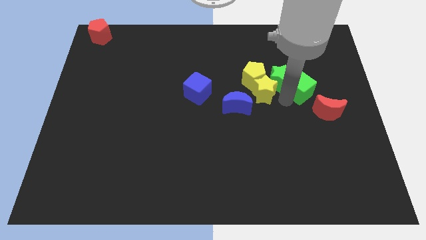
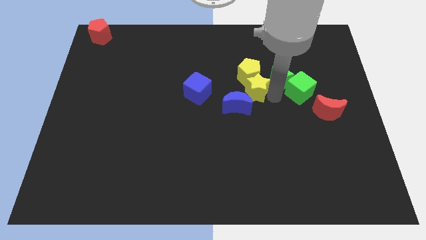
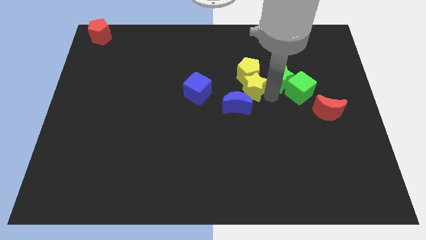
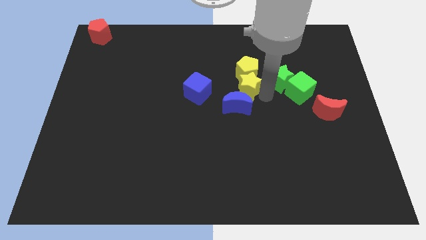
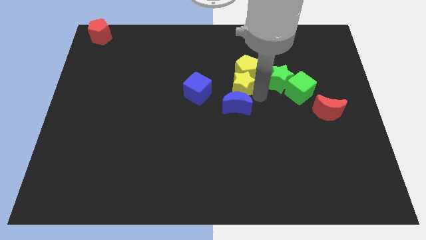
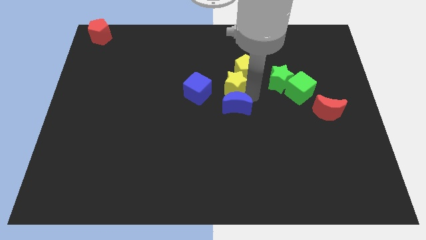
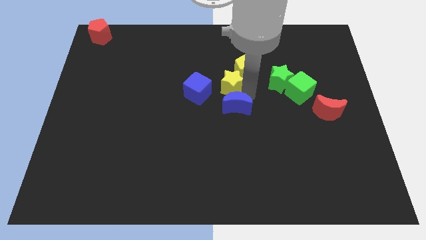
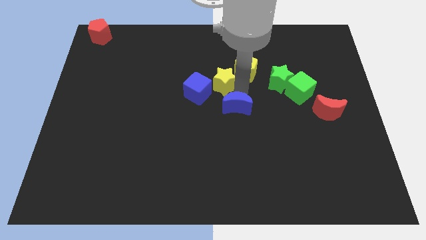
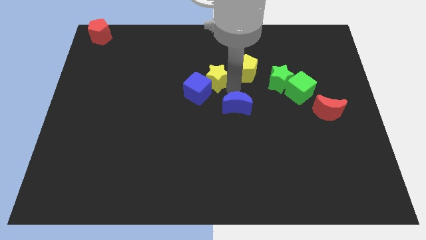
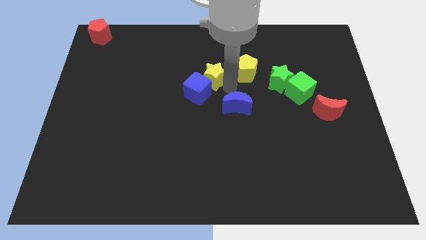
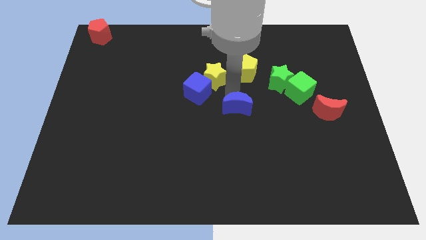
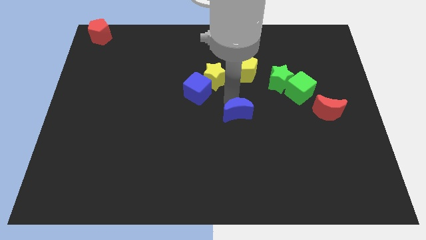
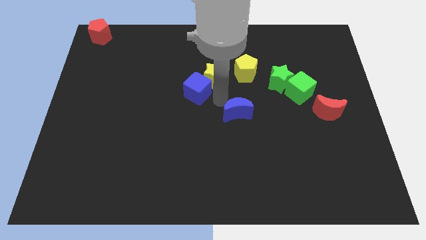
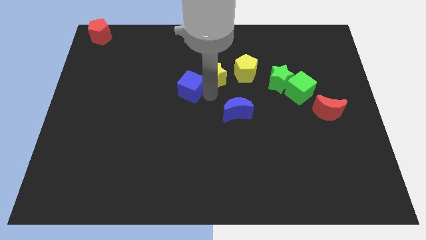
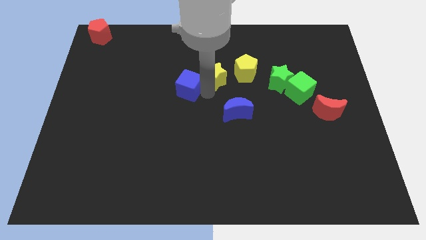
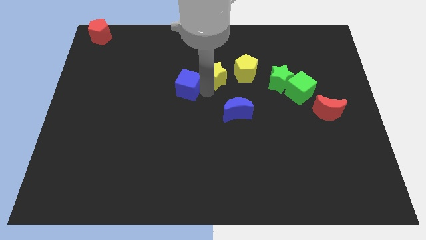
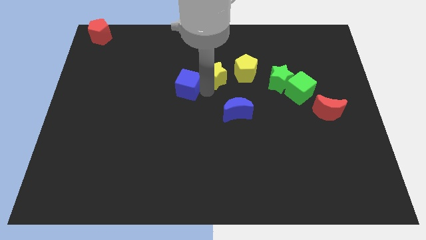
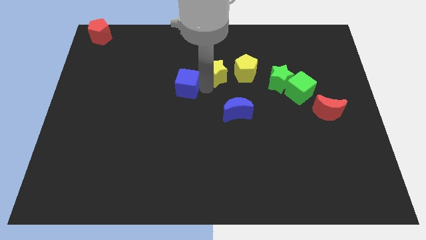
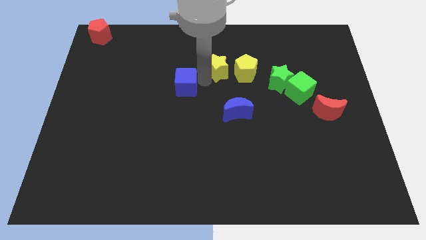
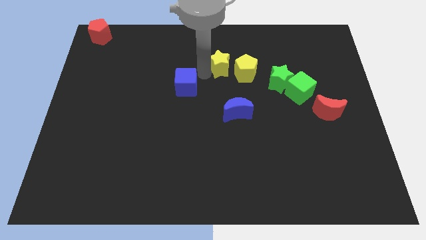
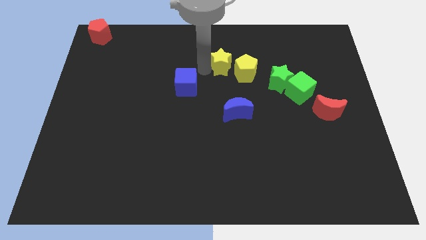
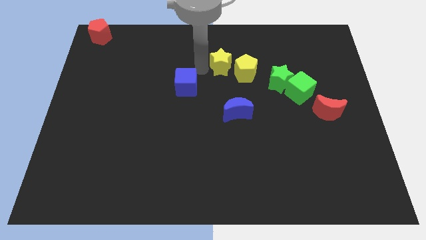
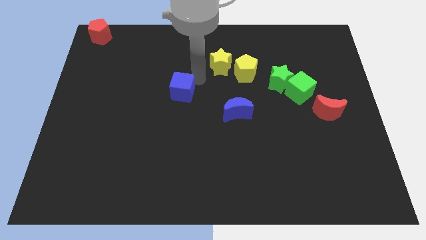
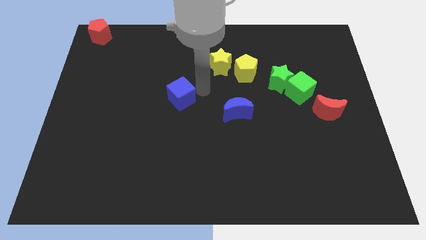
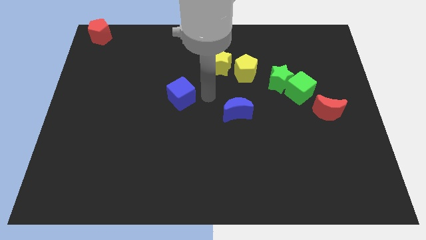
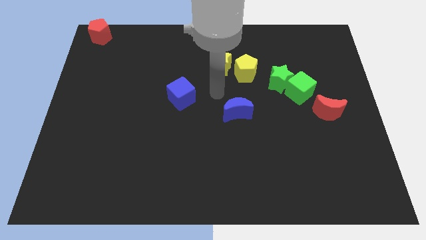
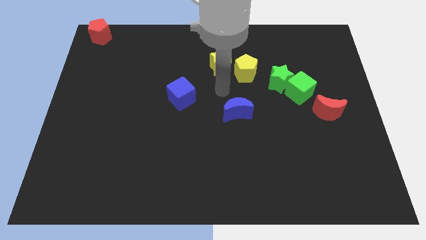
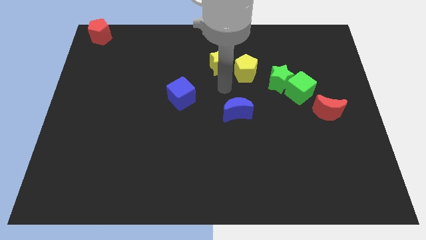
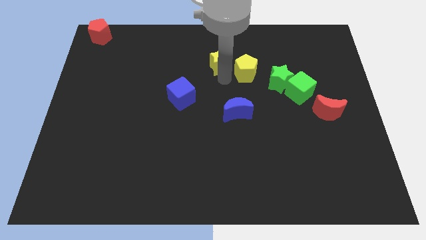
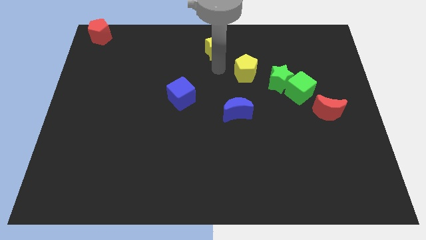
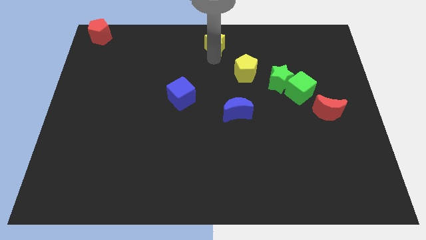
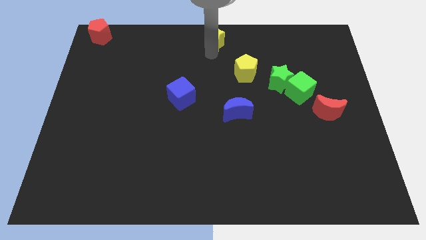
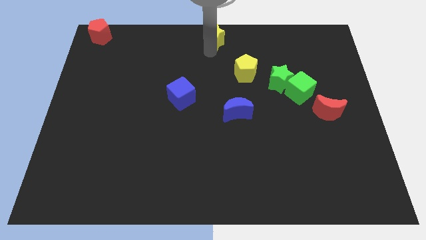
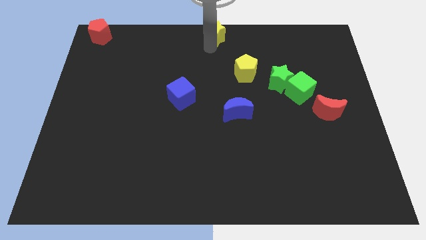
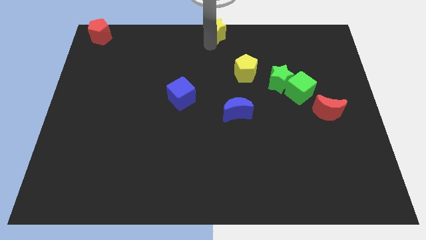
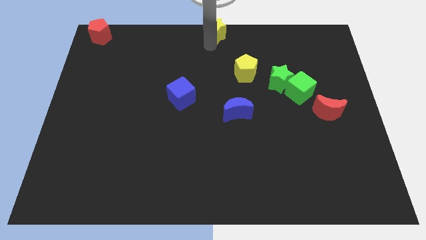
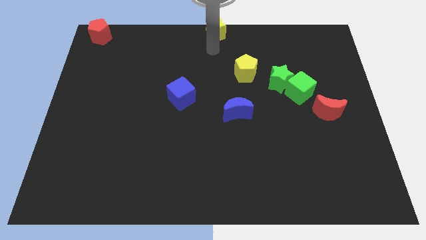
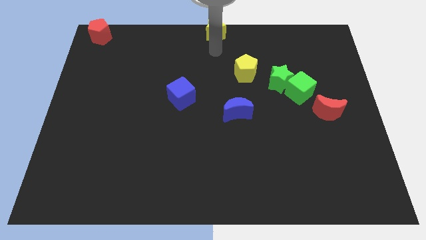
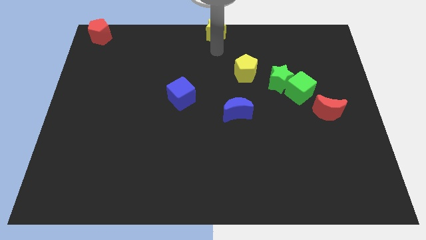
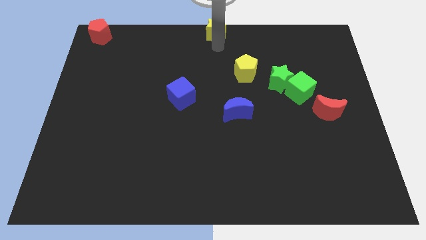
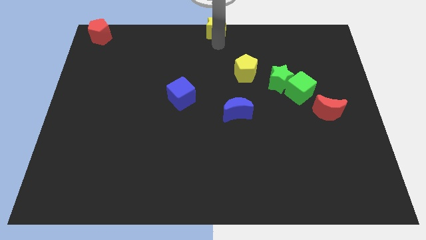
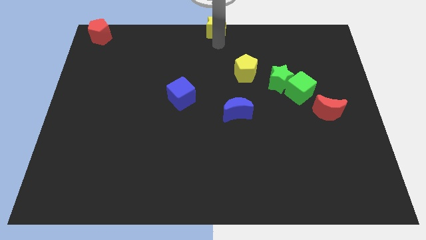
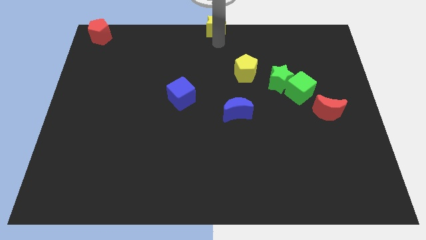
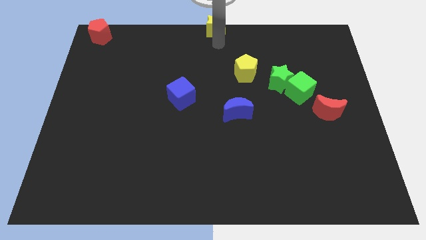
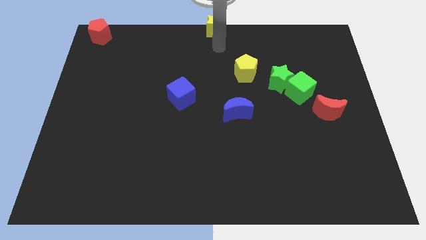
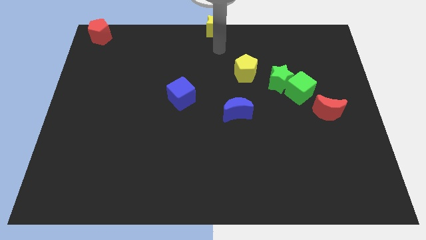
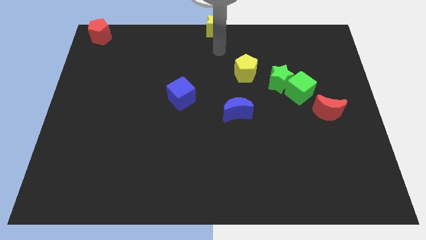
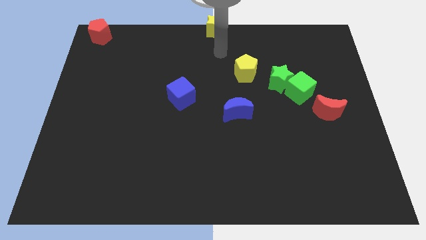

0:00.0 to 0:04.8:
push the yellow star to the top center

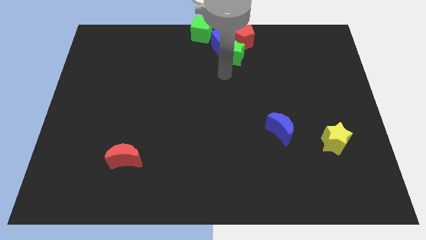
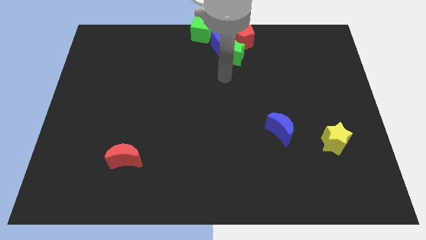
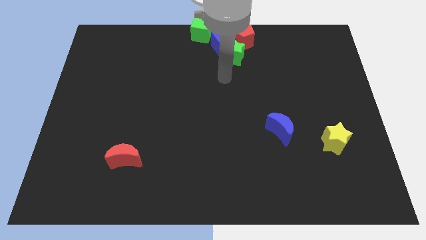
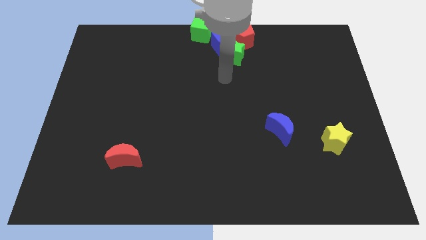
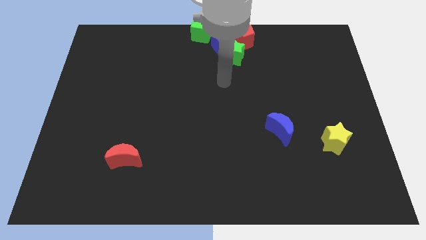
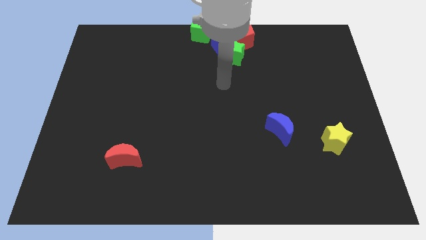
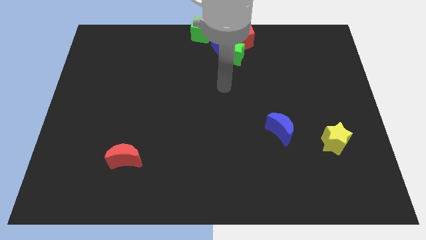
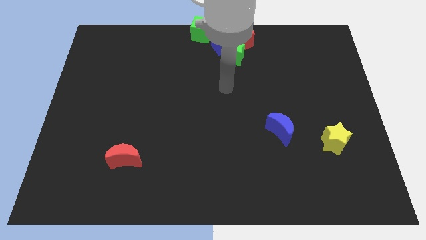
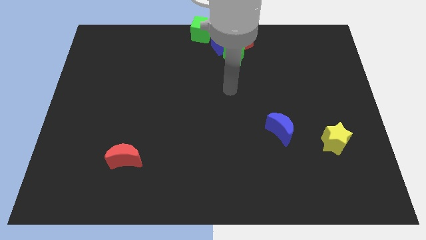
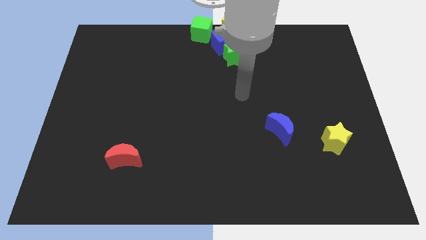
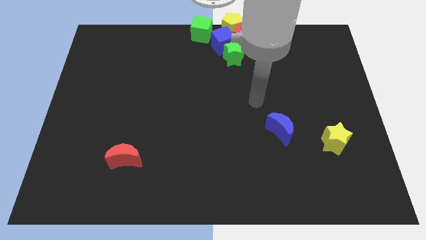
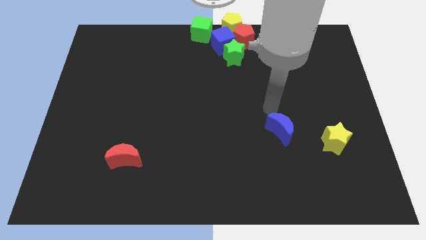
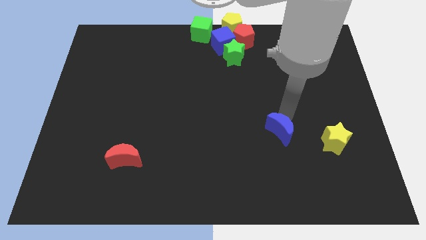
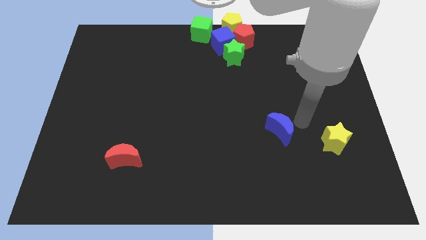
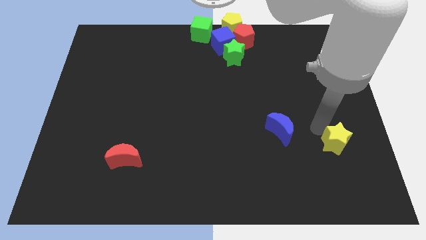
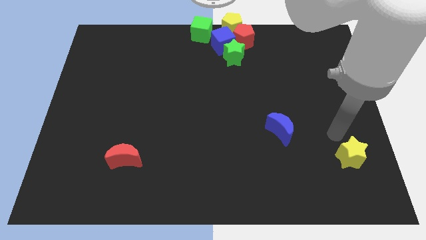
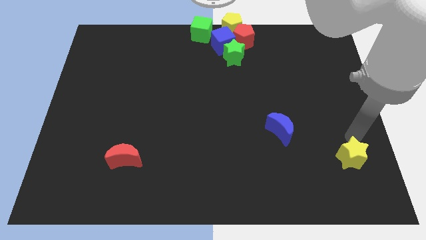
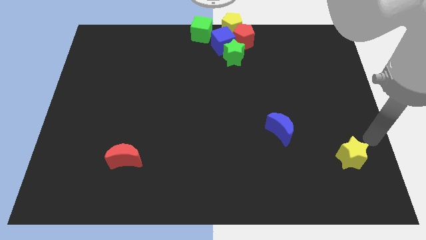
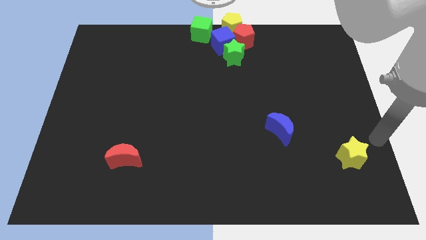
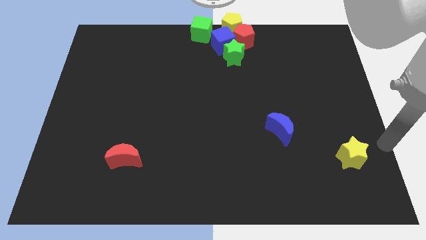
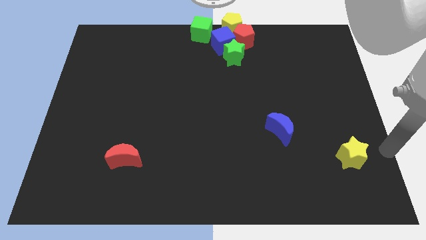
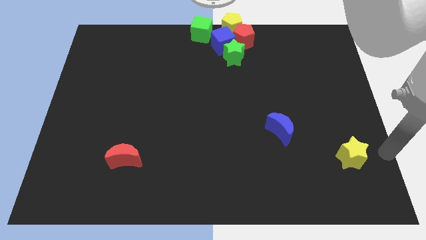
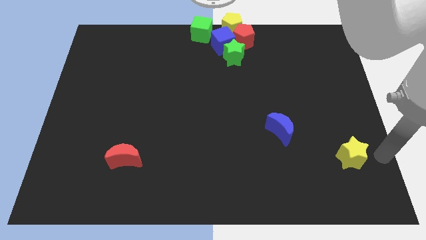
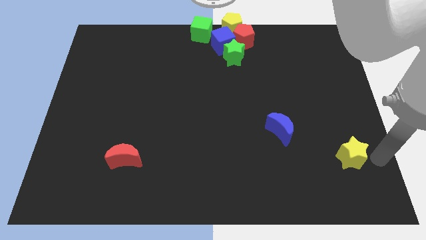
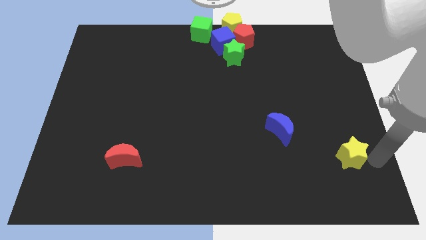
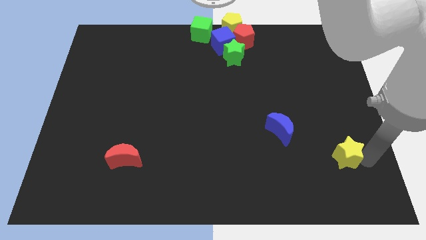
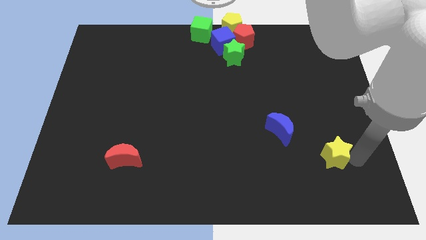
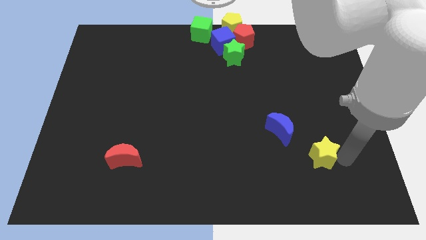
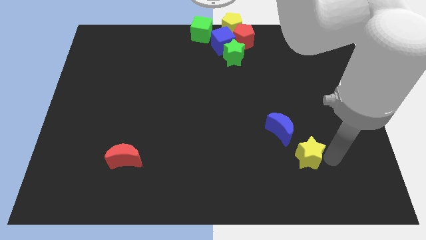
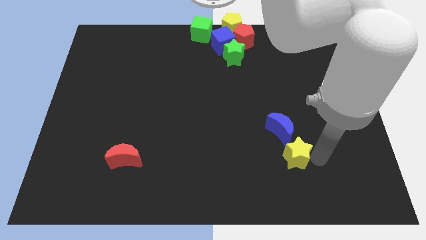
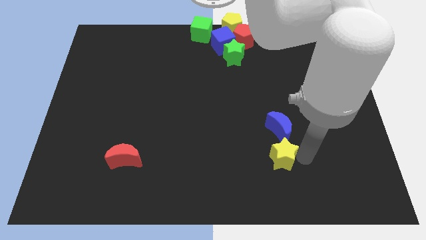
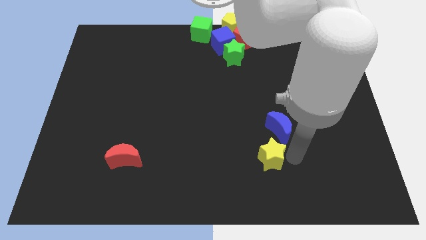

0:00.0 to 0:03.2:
place the yellow star to the bottom side of the blue moon

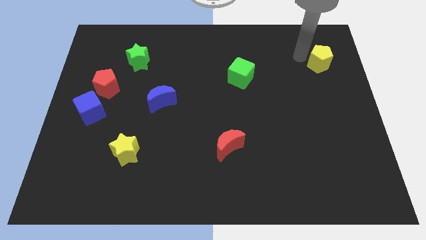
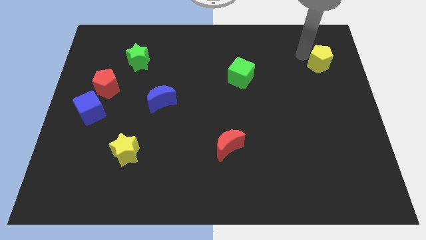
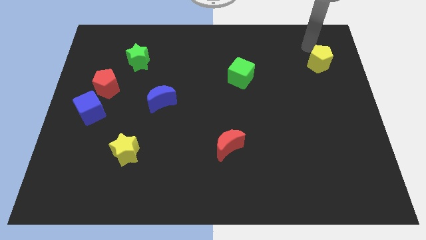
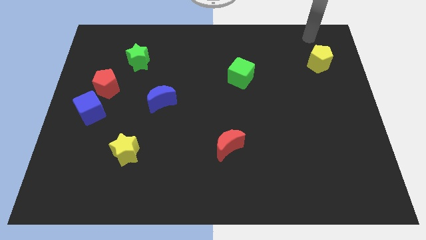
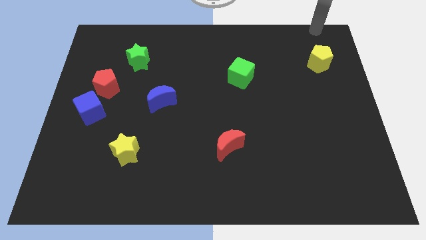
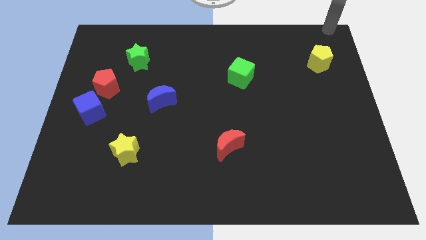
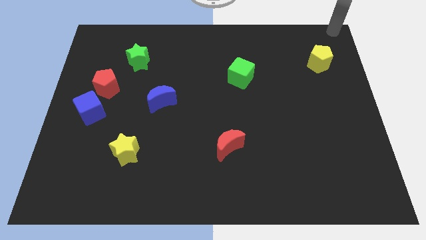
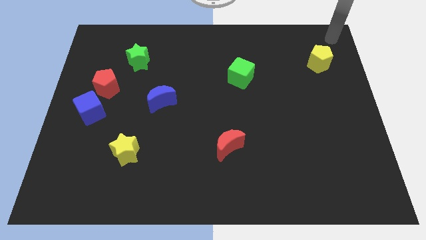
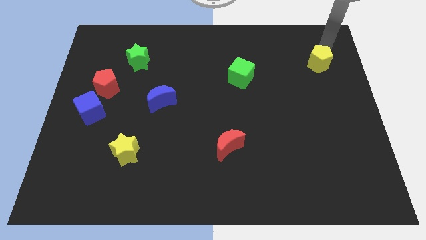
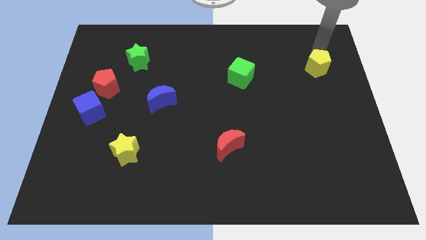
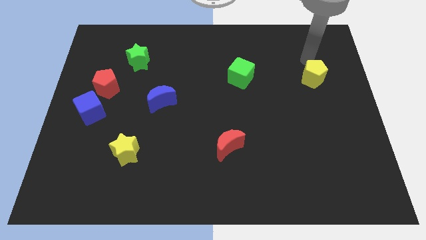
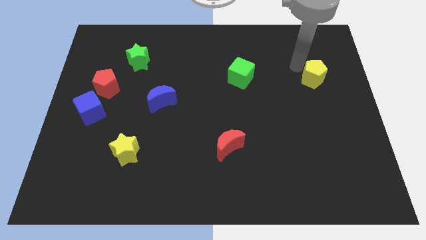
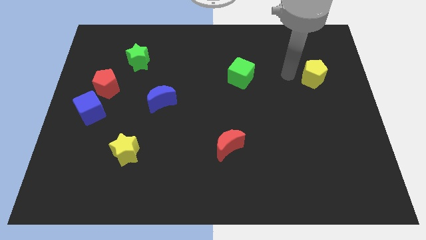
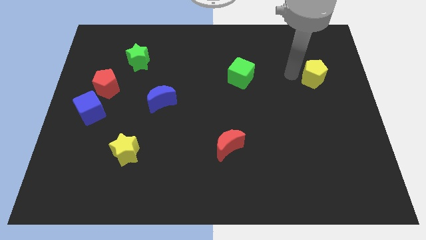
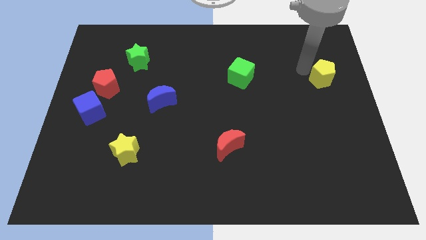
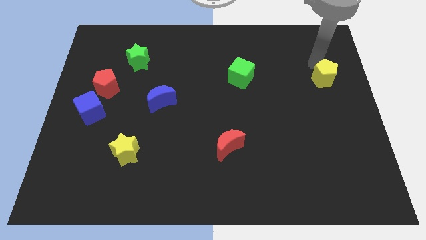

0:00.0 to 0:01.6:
slide the yellow pentagon parallel right to the green cube
